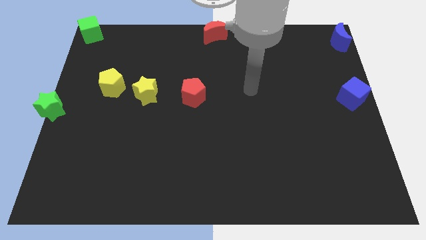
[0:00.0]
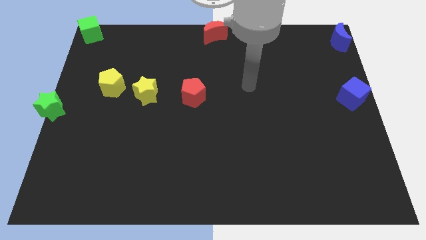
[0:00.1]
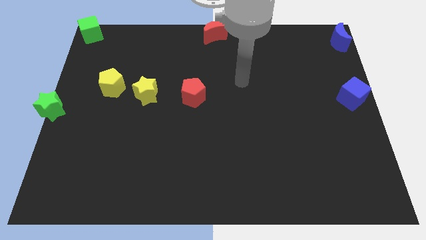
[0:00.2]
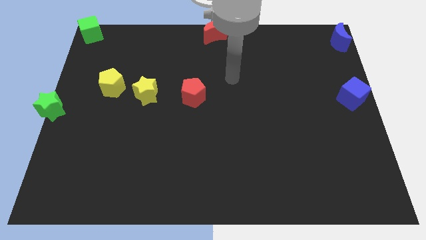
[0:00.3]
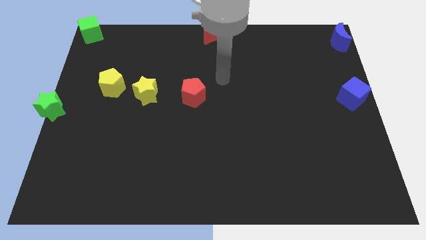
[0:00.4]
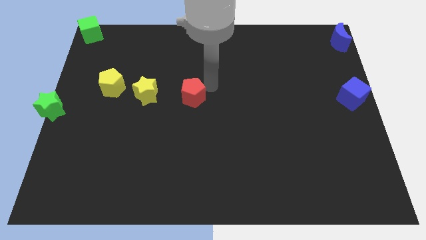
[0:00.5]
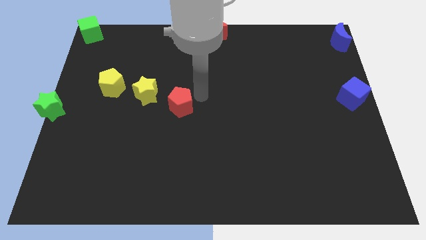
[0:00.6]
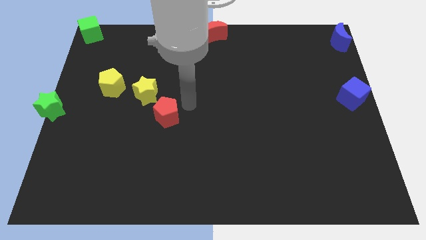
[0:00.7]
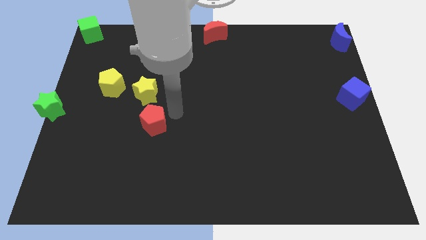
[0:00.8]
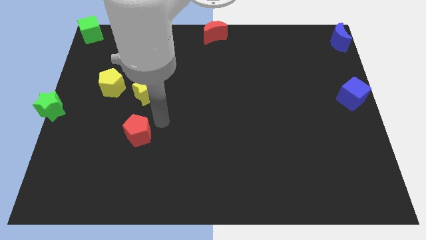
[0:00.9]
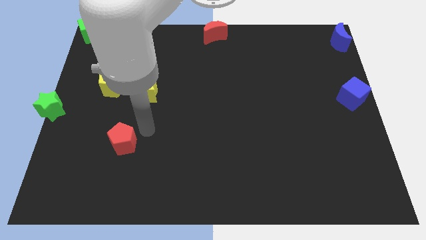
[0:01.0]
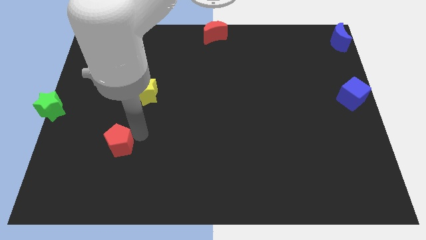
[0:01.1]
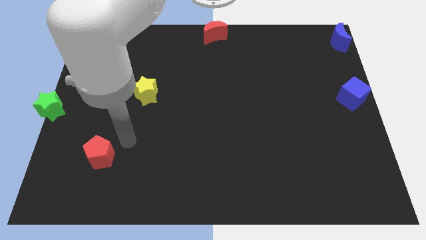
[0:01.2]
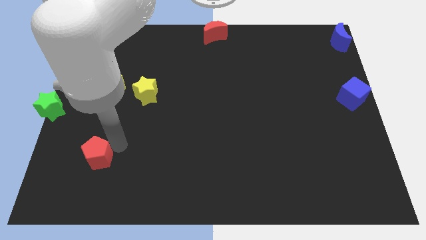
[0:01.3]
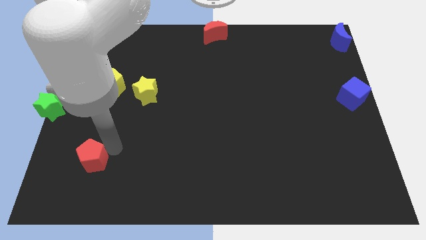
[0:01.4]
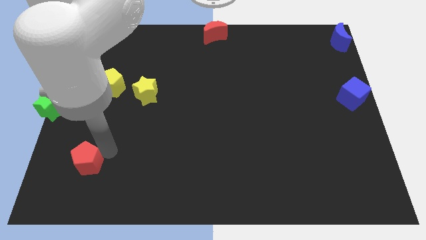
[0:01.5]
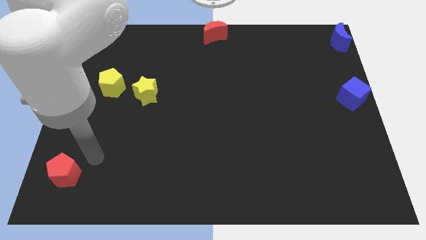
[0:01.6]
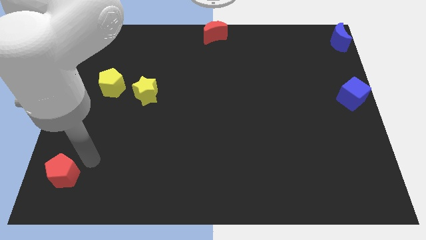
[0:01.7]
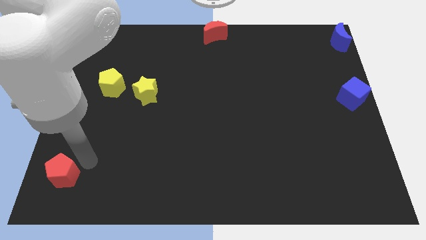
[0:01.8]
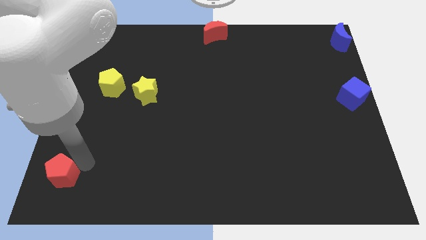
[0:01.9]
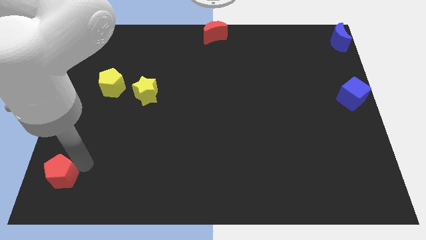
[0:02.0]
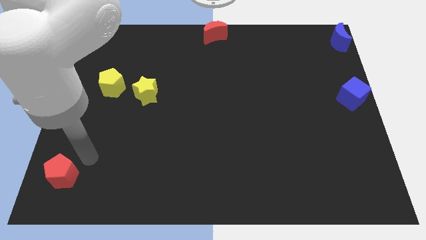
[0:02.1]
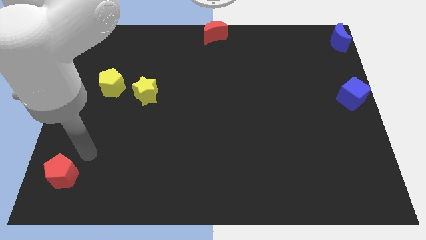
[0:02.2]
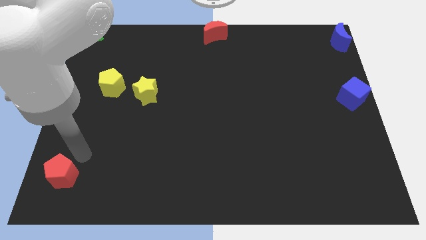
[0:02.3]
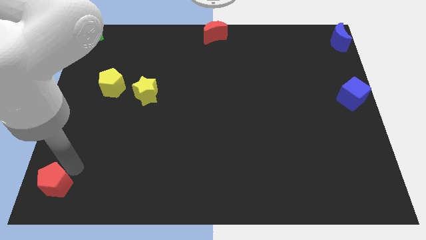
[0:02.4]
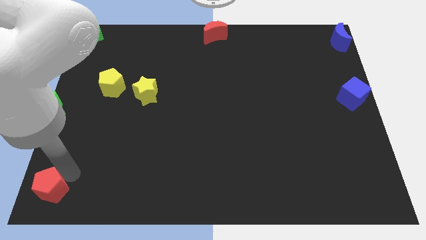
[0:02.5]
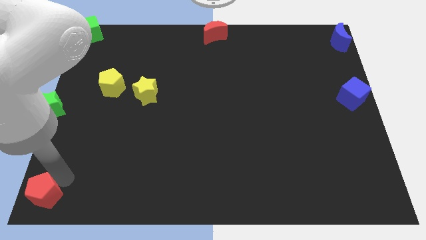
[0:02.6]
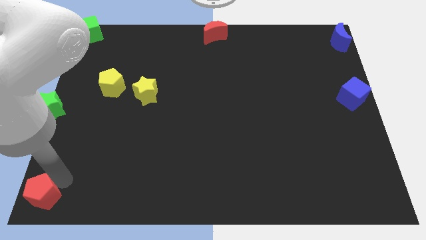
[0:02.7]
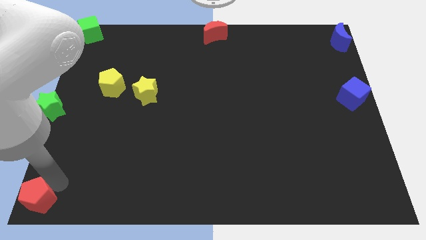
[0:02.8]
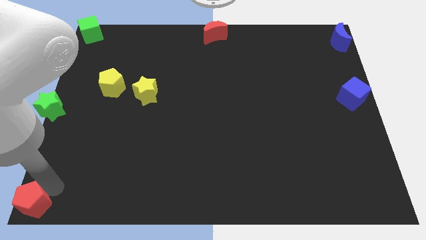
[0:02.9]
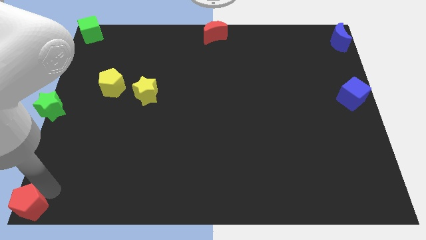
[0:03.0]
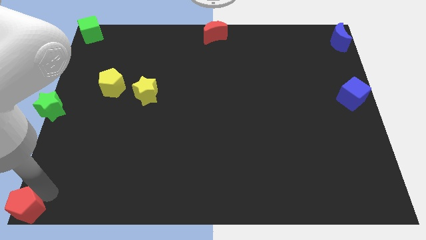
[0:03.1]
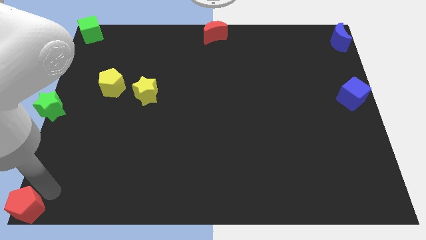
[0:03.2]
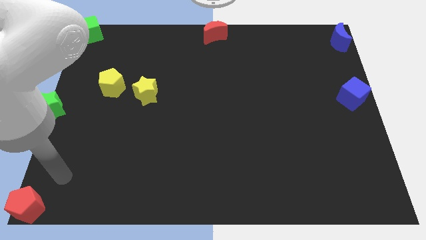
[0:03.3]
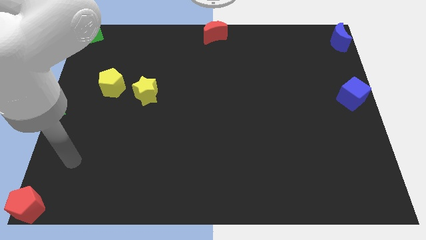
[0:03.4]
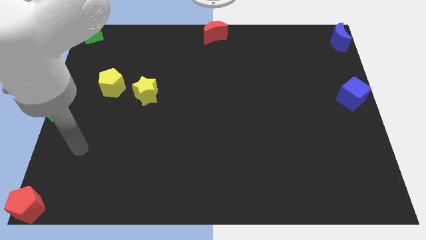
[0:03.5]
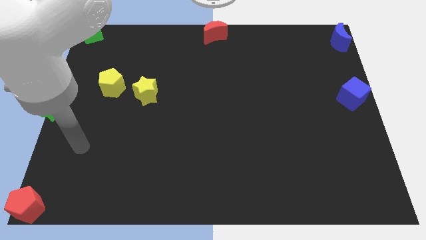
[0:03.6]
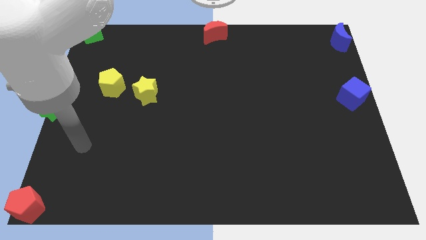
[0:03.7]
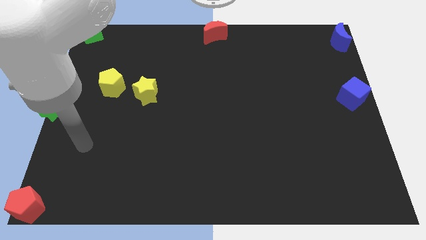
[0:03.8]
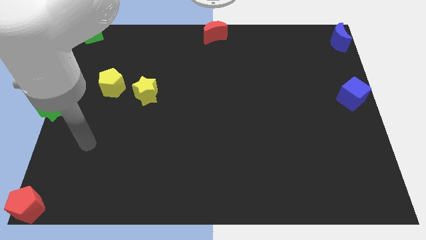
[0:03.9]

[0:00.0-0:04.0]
move the red pentagon to the bottom left corner of the board

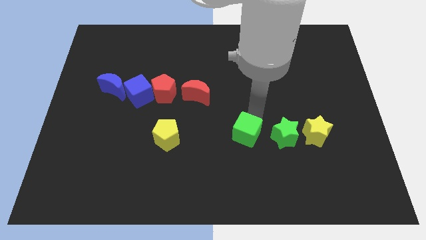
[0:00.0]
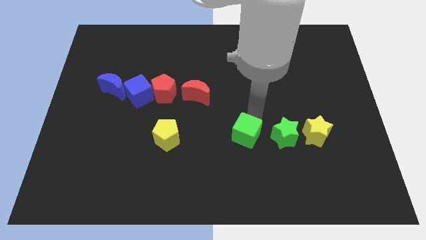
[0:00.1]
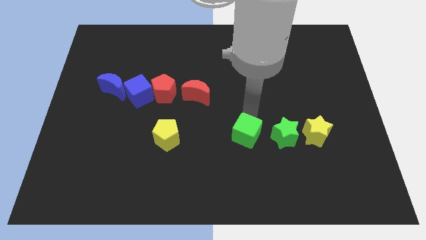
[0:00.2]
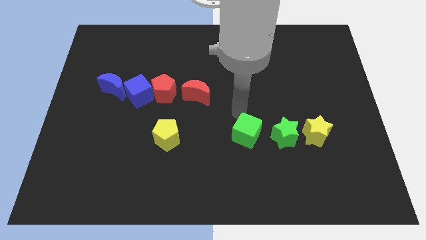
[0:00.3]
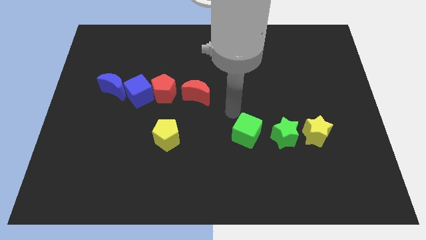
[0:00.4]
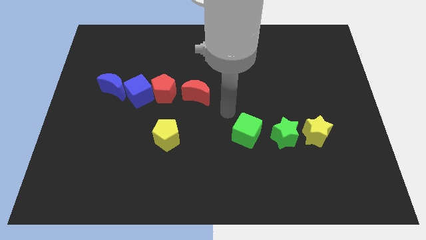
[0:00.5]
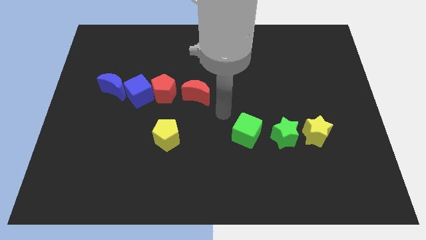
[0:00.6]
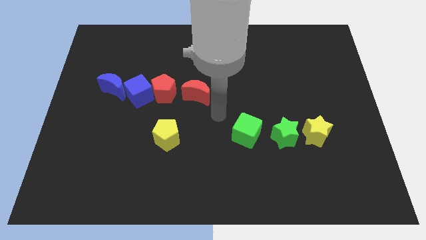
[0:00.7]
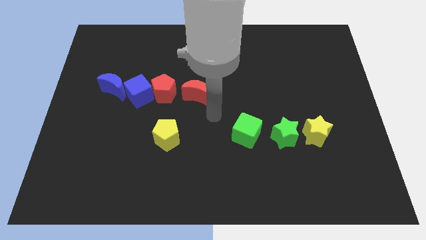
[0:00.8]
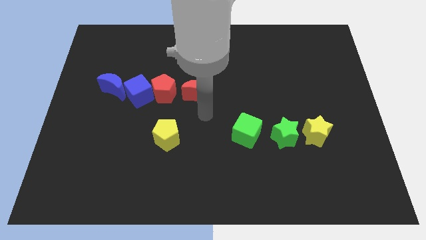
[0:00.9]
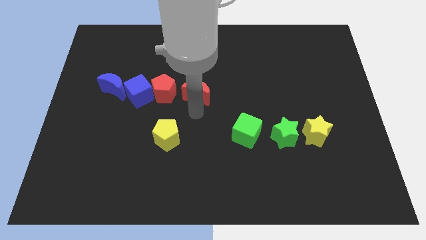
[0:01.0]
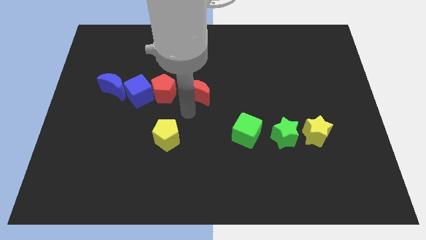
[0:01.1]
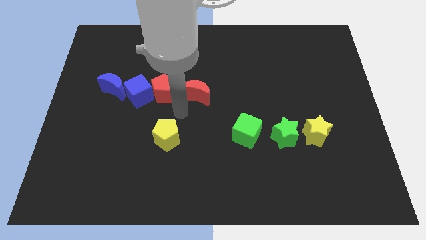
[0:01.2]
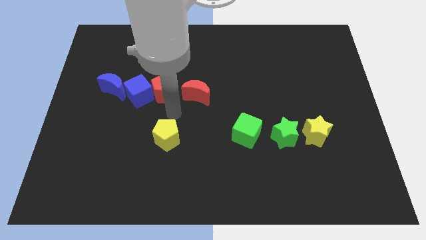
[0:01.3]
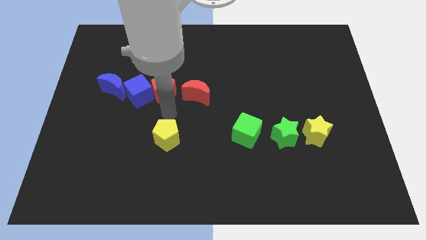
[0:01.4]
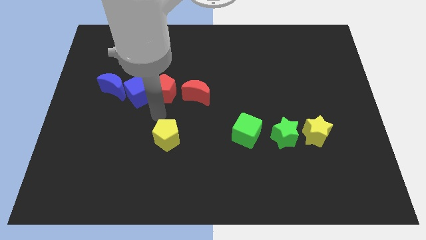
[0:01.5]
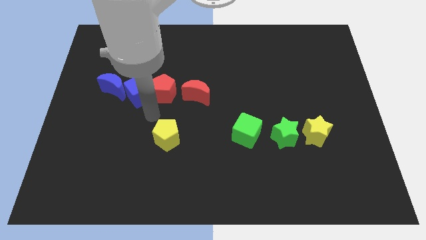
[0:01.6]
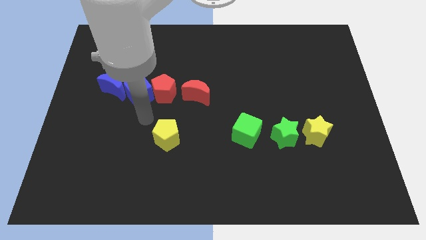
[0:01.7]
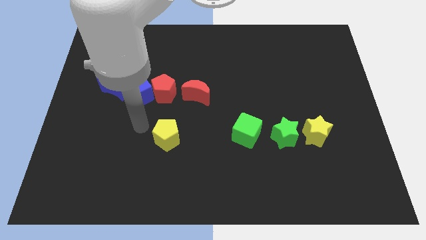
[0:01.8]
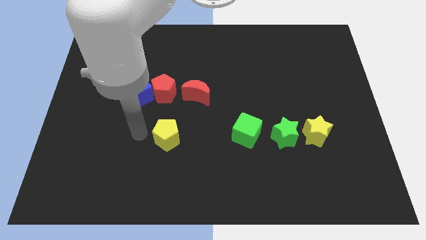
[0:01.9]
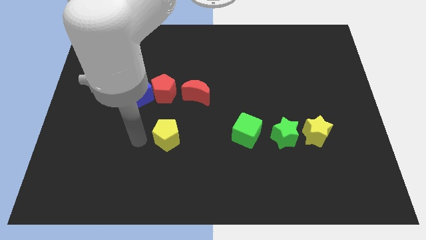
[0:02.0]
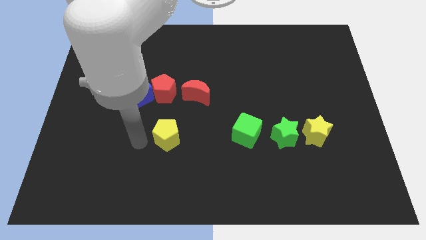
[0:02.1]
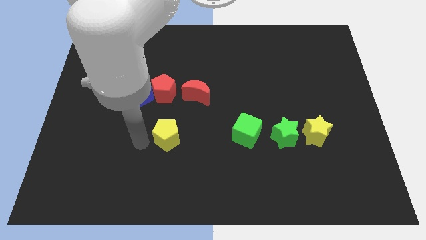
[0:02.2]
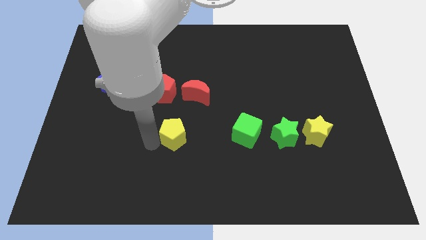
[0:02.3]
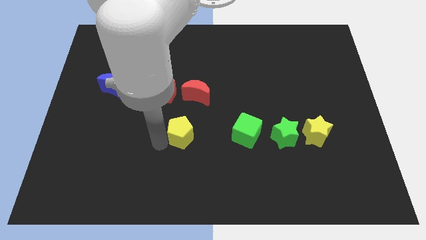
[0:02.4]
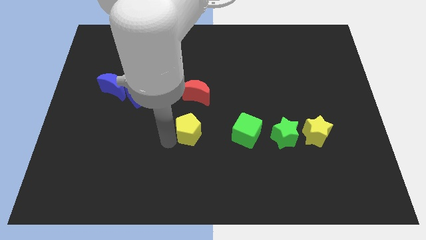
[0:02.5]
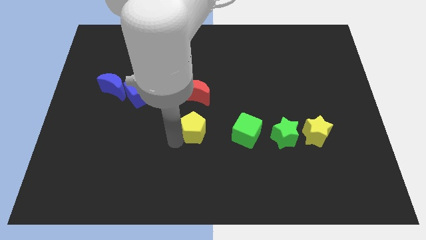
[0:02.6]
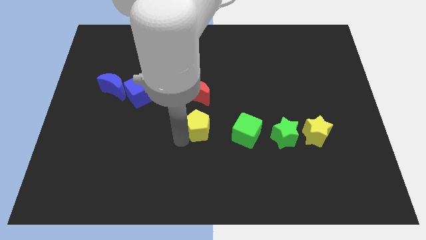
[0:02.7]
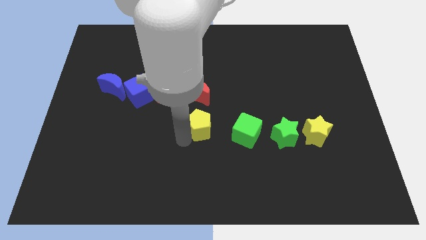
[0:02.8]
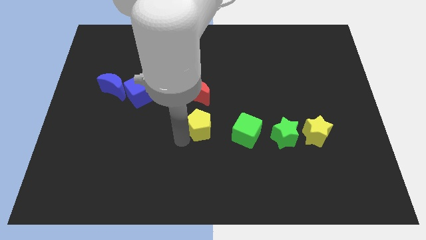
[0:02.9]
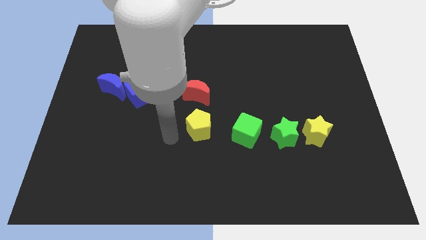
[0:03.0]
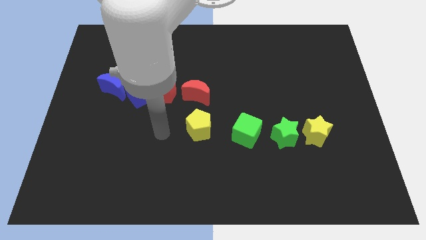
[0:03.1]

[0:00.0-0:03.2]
move your arm close to the yellow pentagon

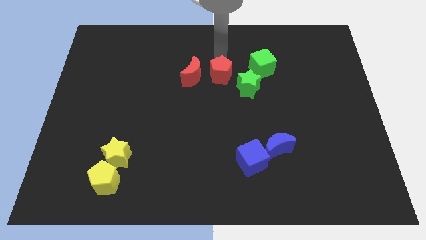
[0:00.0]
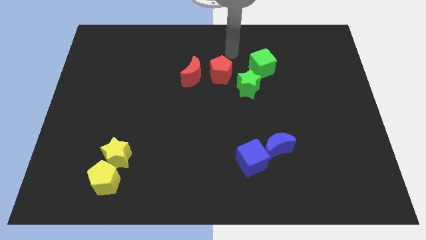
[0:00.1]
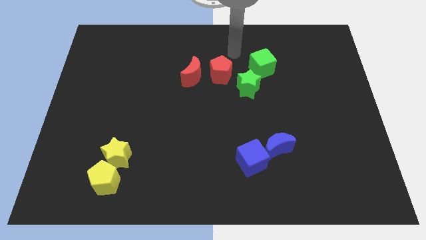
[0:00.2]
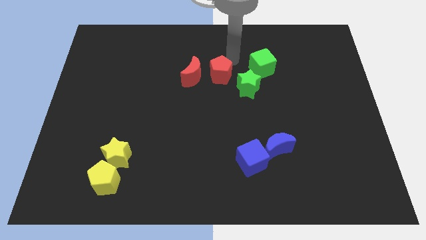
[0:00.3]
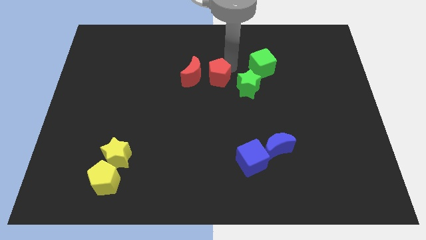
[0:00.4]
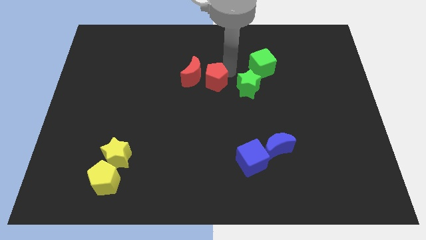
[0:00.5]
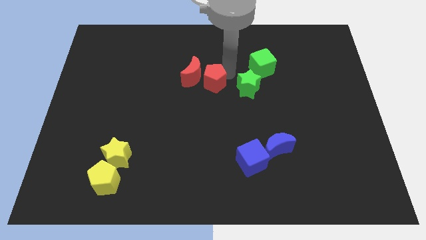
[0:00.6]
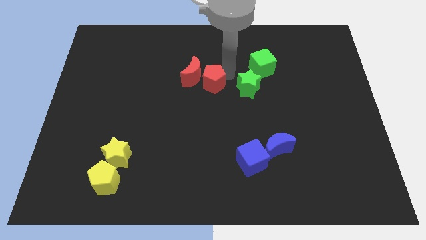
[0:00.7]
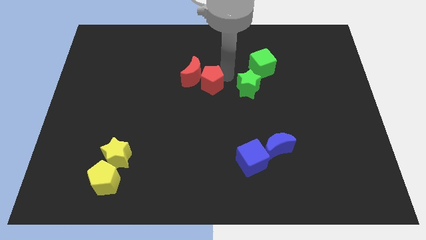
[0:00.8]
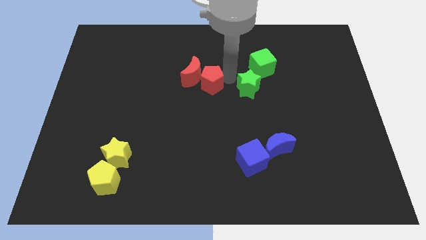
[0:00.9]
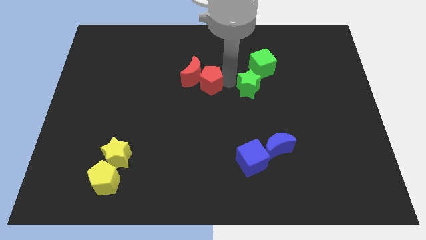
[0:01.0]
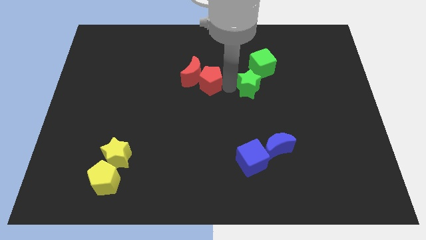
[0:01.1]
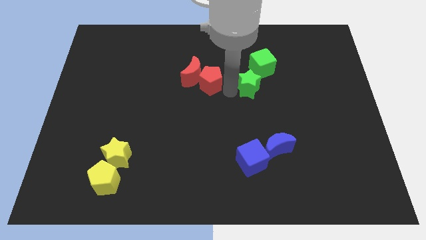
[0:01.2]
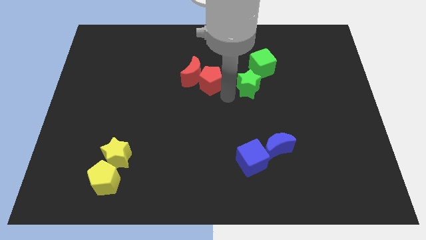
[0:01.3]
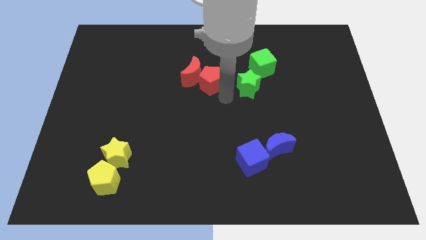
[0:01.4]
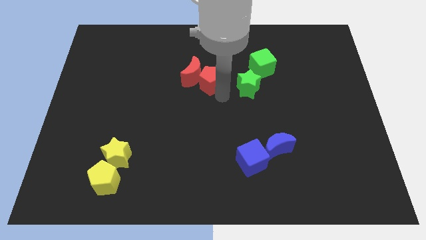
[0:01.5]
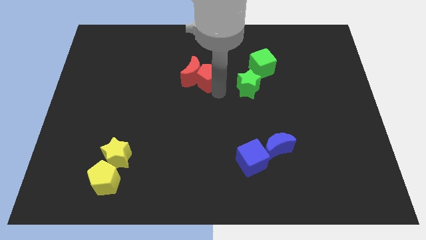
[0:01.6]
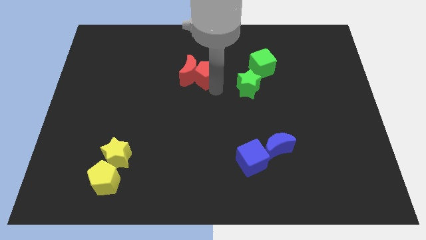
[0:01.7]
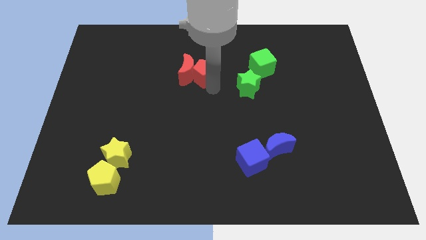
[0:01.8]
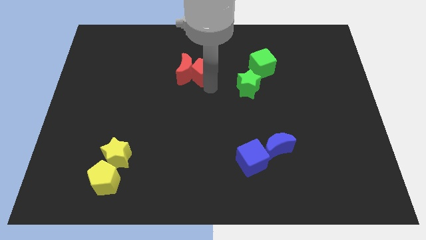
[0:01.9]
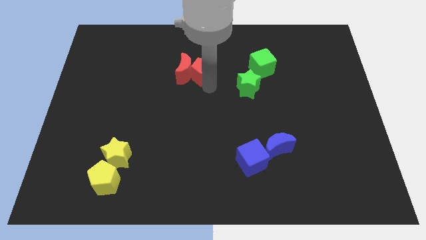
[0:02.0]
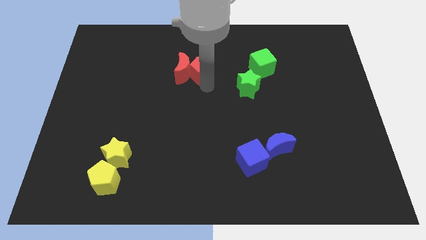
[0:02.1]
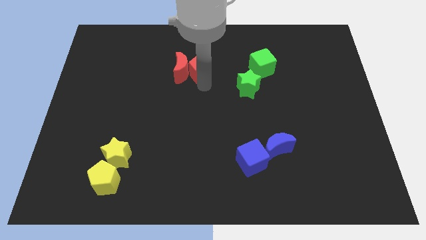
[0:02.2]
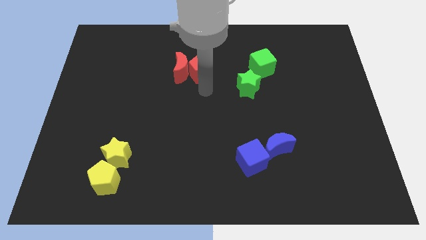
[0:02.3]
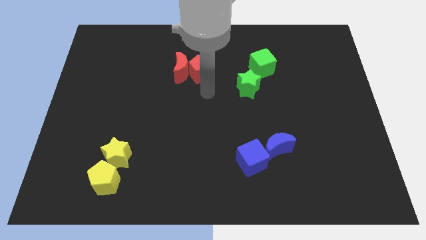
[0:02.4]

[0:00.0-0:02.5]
push the red pentagon to the right of the red crescent
